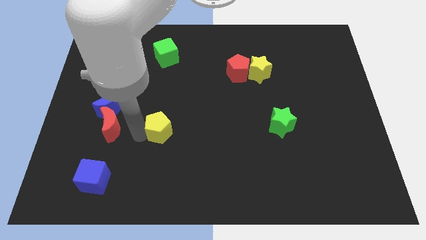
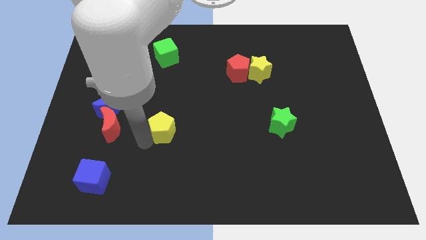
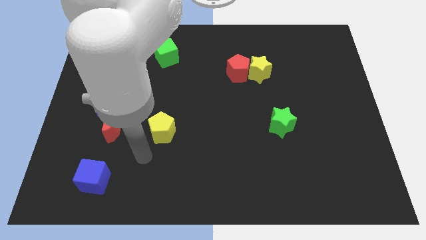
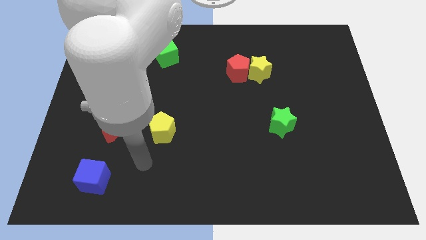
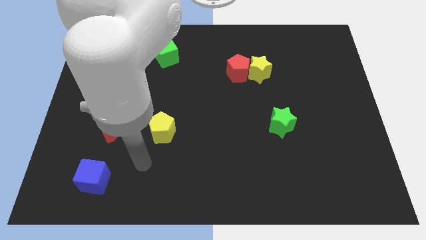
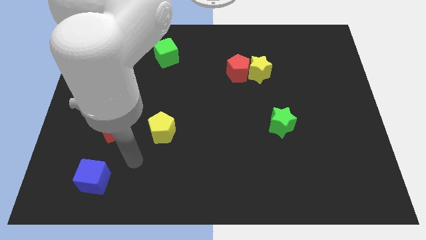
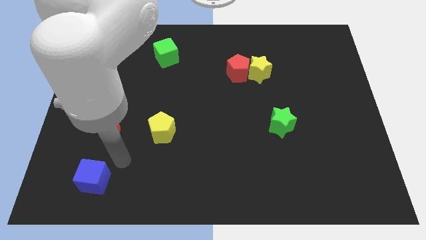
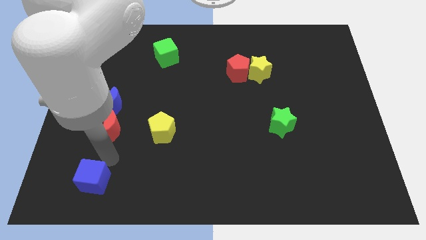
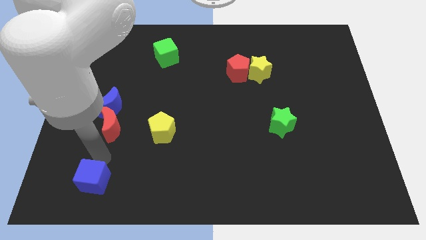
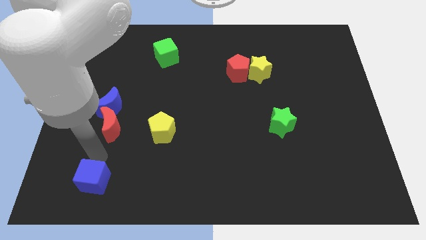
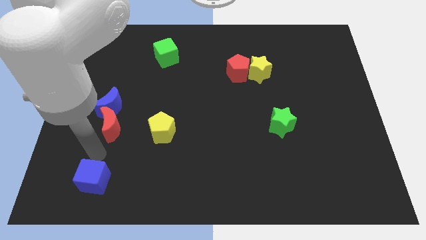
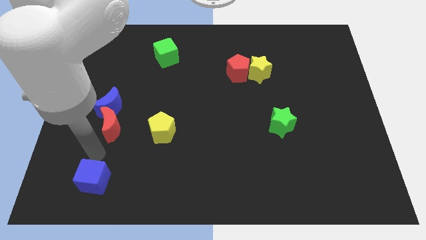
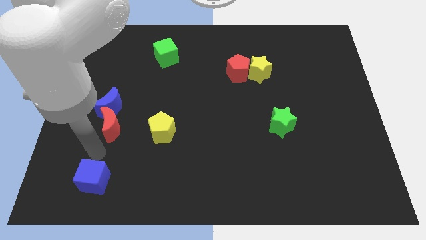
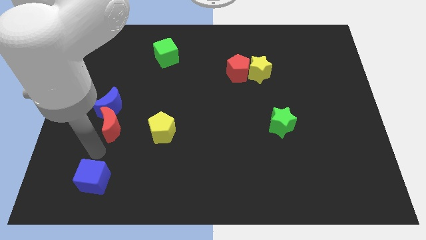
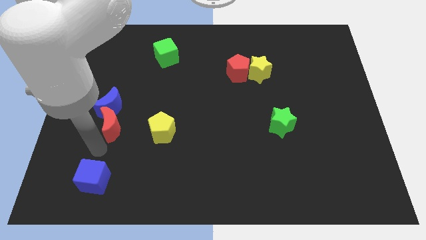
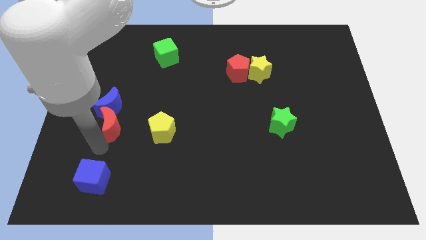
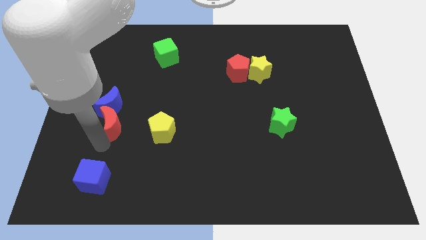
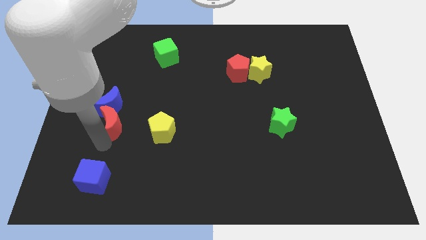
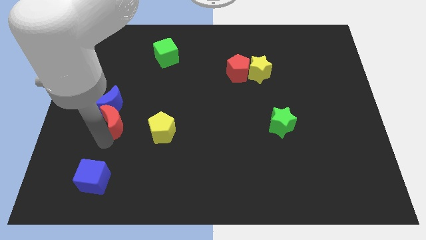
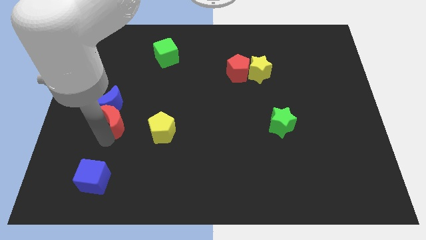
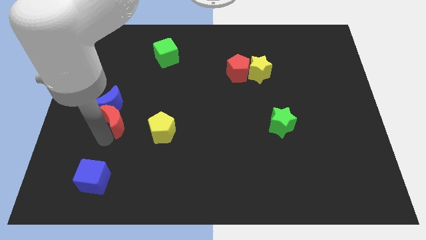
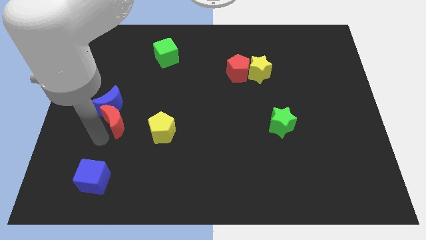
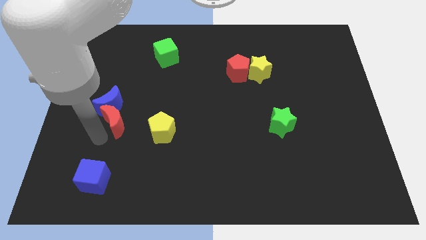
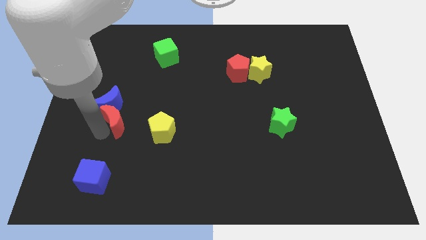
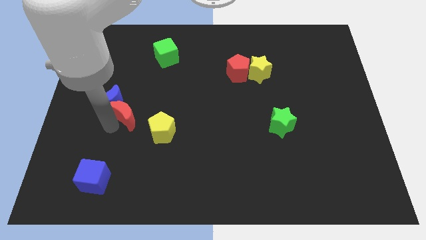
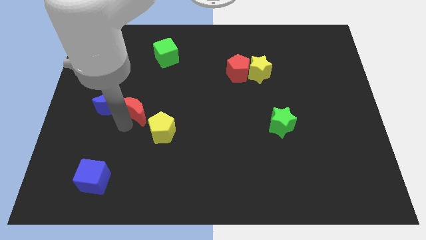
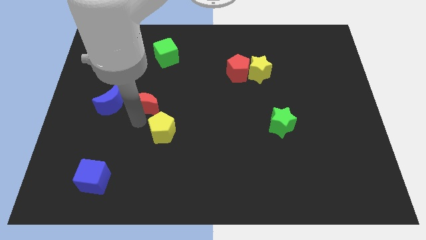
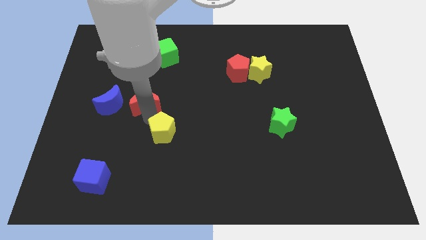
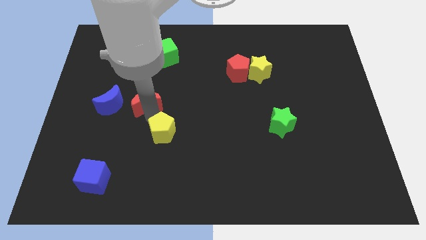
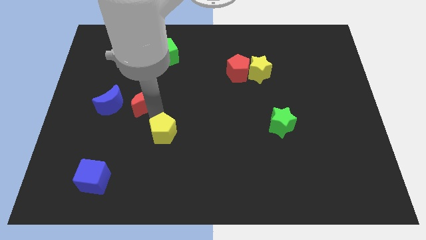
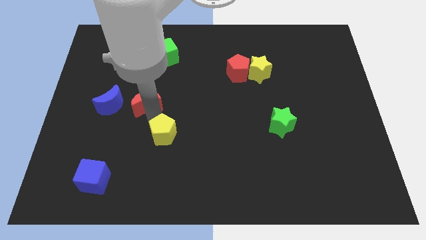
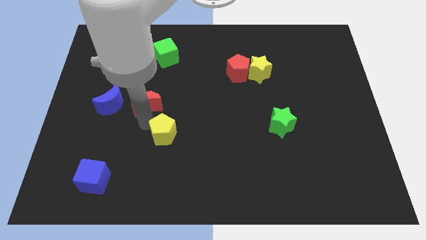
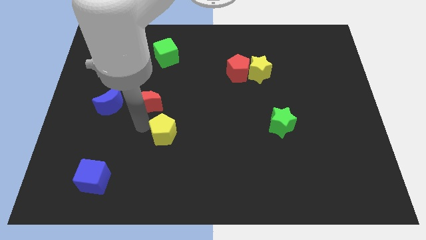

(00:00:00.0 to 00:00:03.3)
place red crescent near to the yellow pentagon

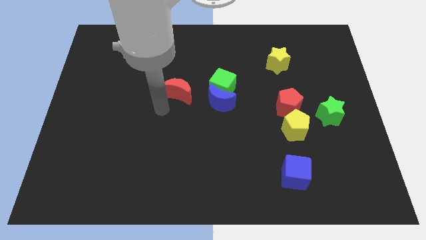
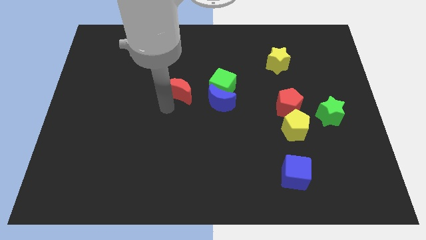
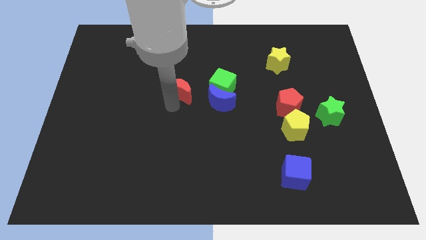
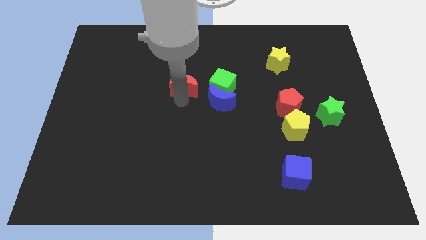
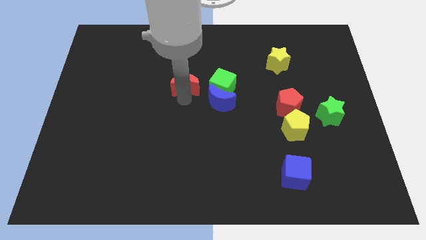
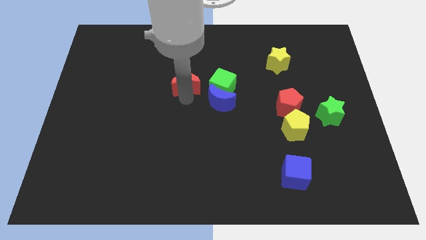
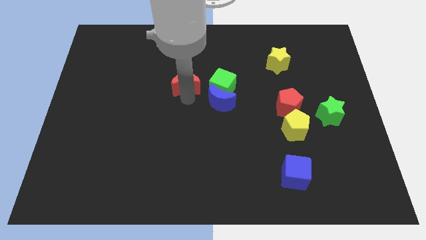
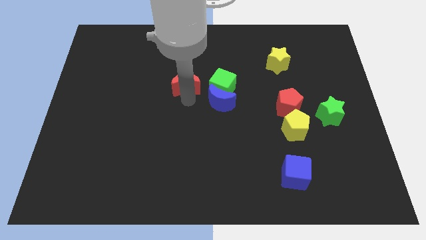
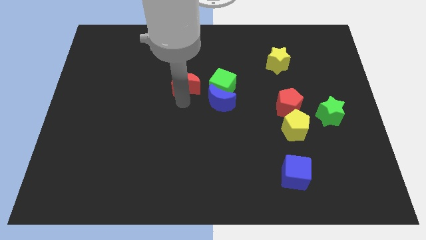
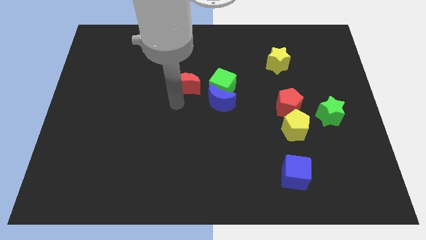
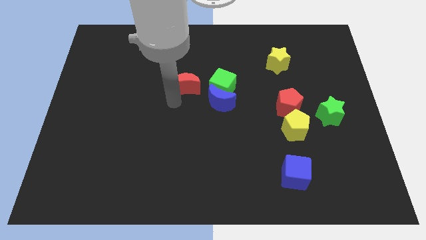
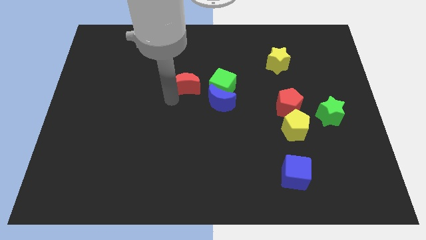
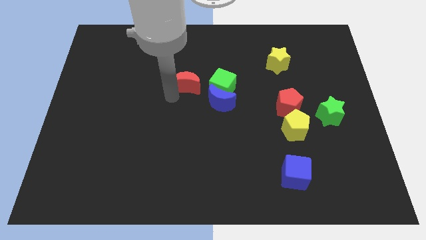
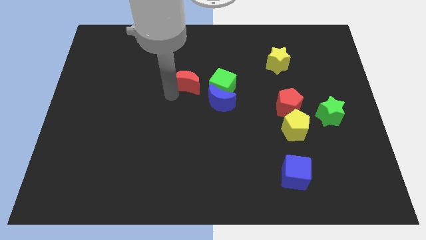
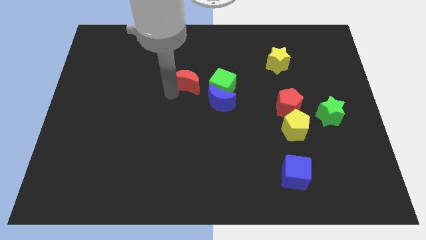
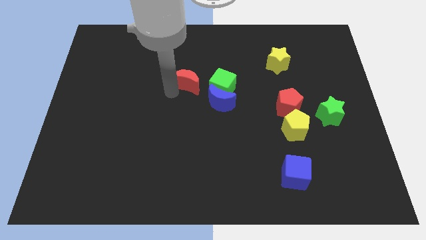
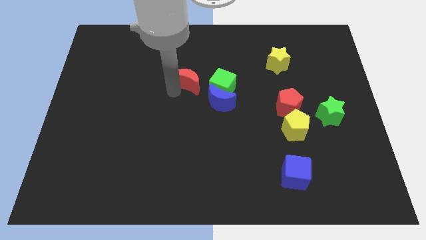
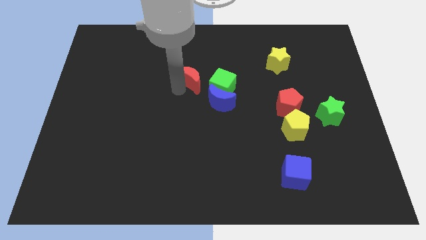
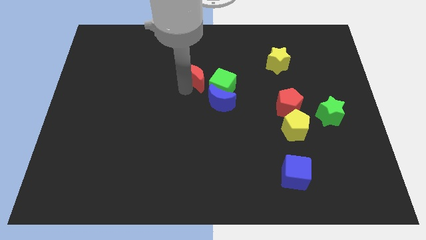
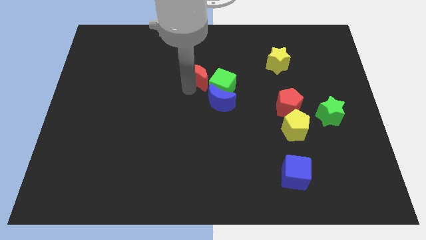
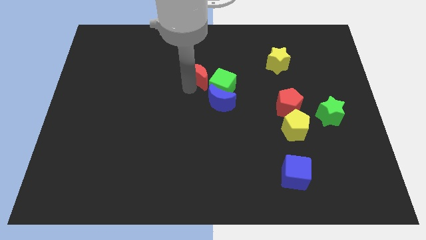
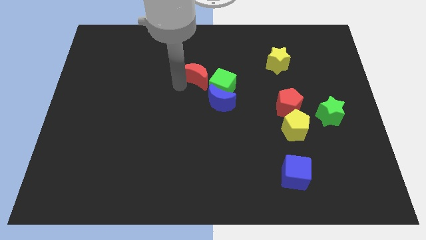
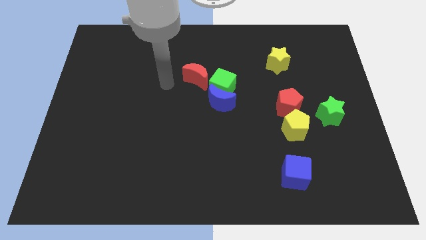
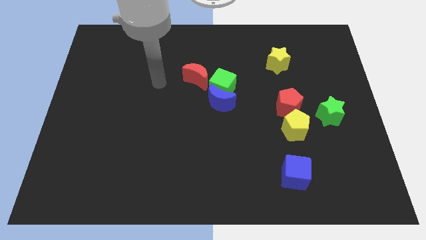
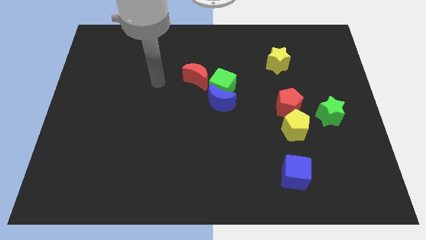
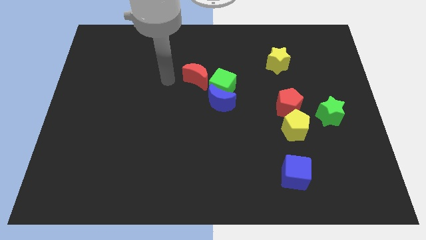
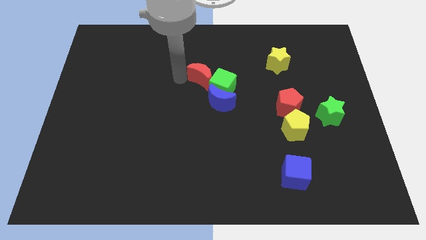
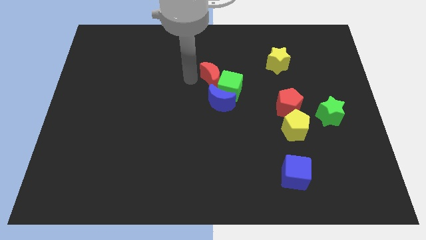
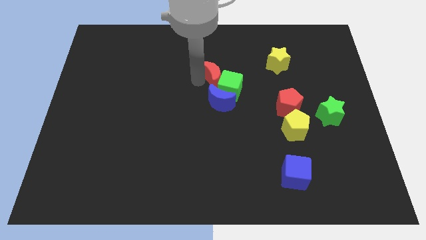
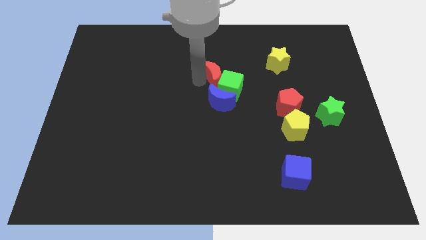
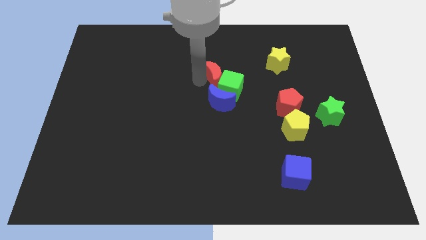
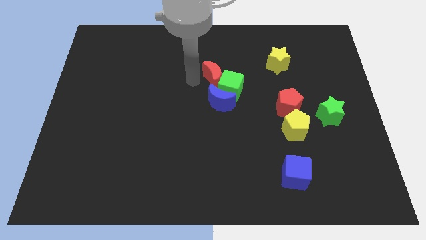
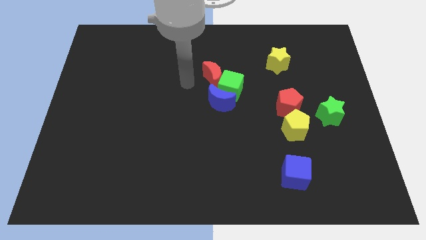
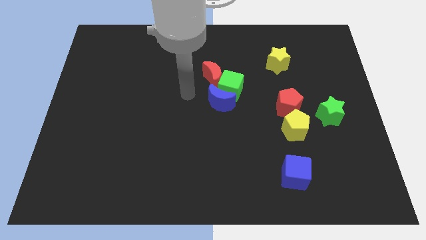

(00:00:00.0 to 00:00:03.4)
push the green cube slightly with red crescent to the right

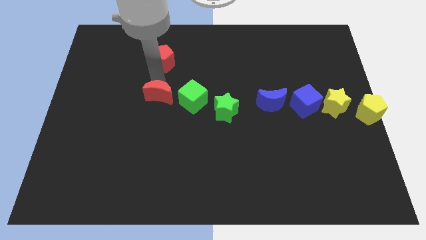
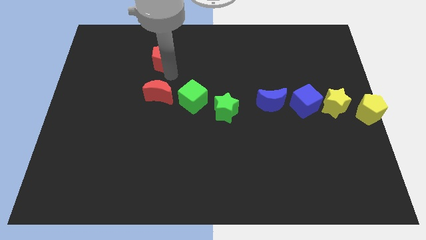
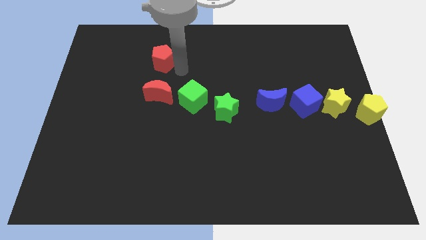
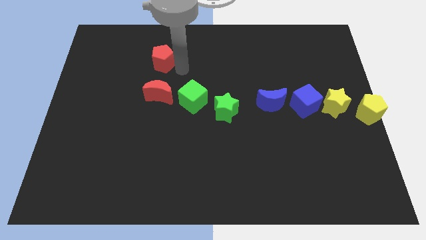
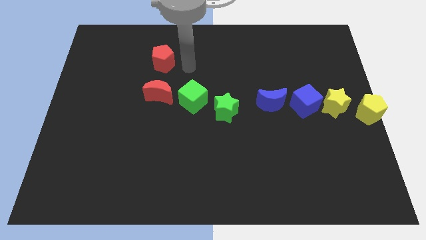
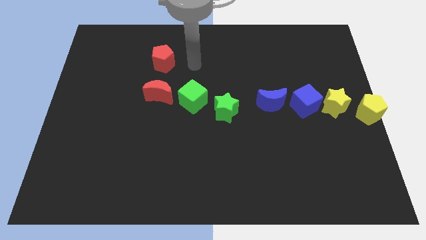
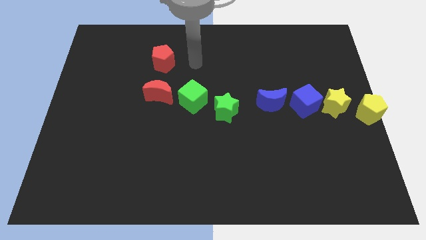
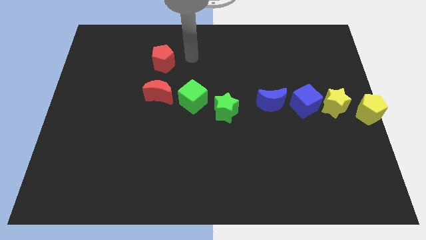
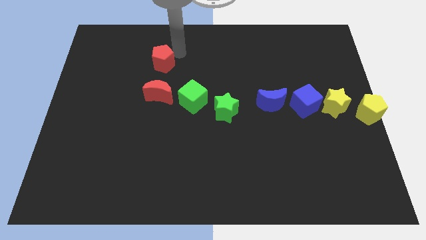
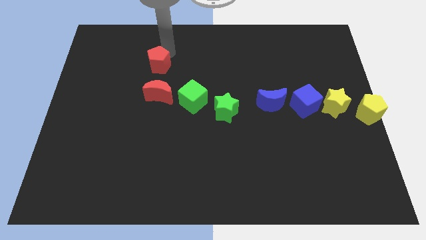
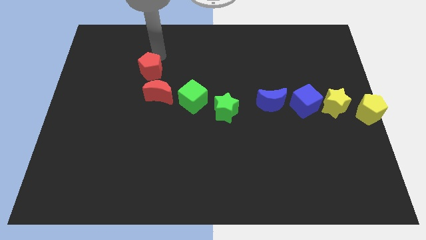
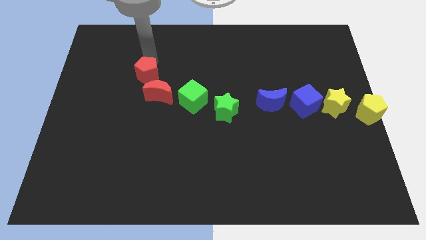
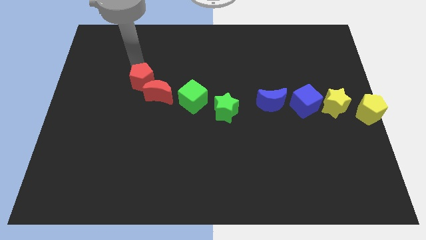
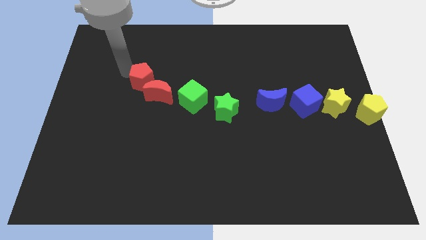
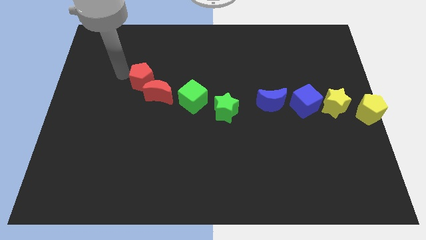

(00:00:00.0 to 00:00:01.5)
move the red pentagon diagonally top left to red moon

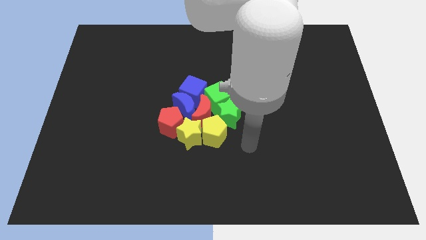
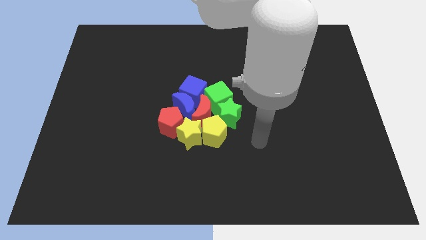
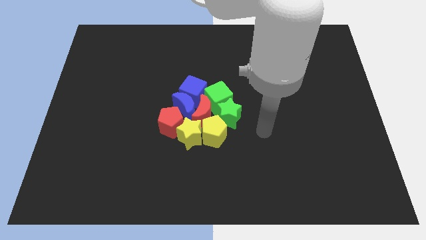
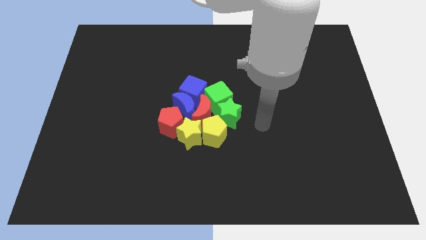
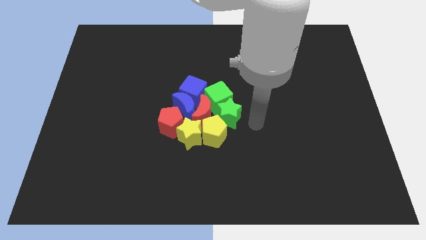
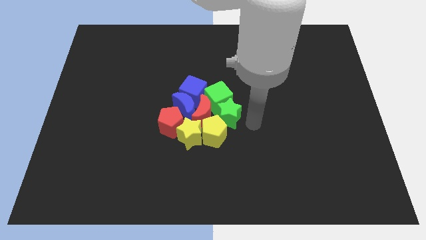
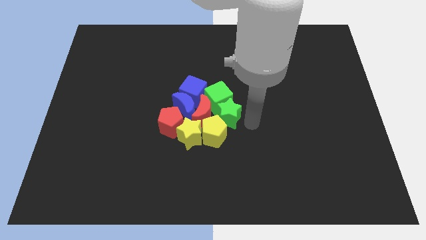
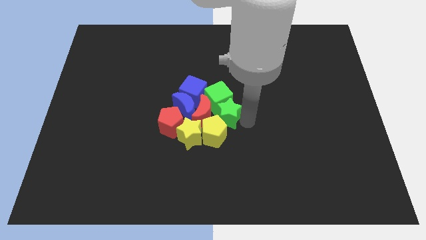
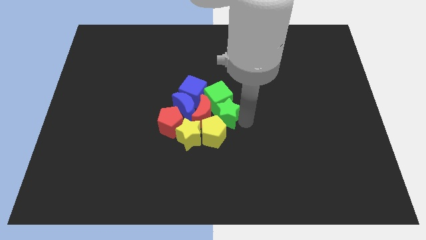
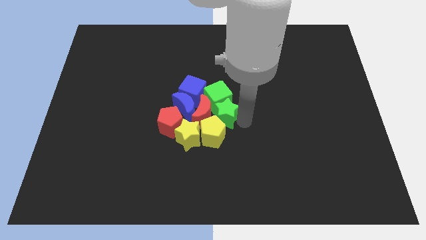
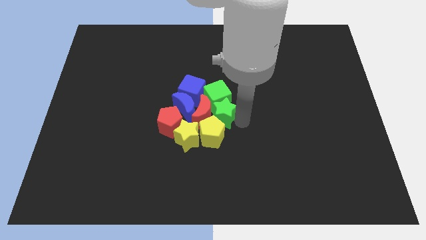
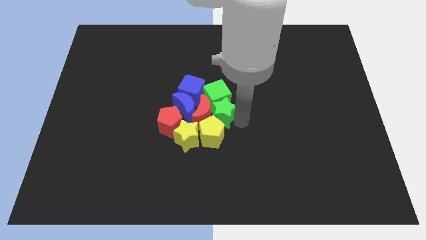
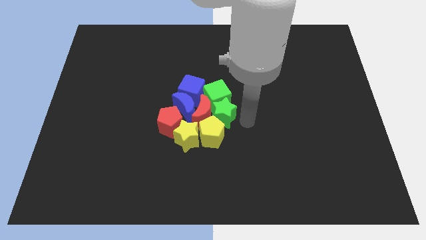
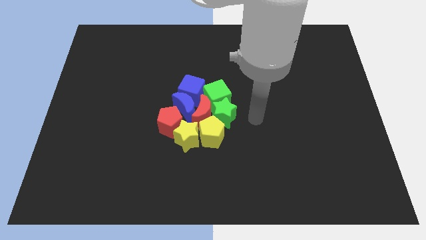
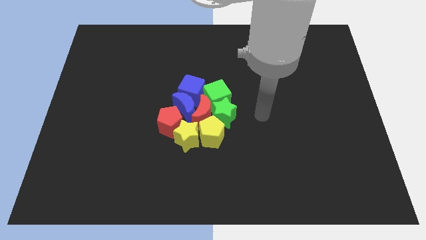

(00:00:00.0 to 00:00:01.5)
move the green star into the group of blocks
